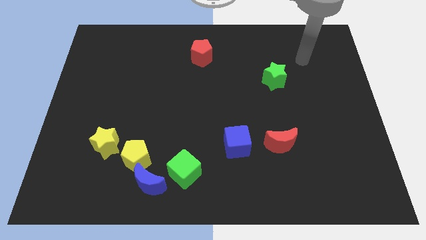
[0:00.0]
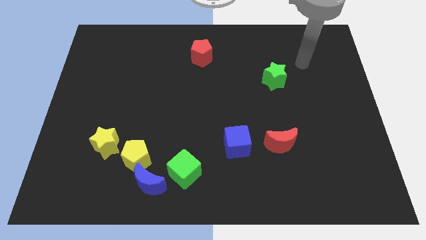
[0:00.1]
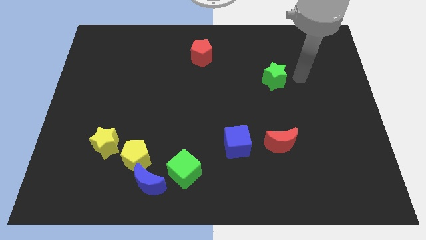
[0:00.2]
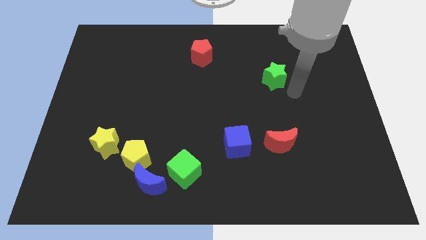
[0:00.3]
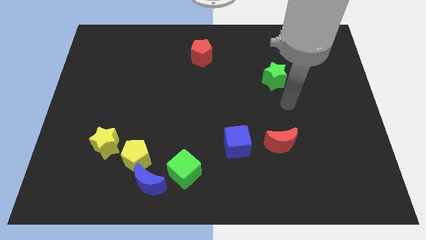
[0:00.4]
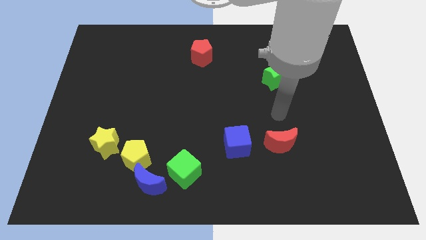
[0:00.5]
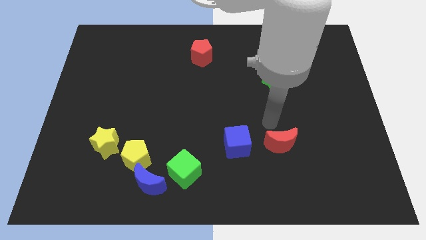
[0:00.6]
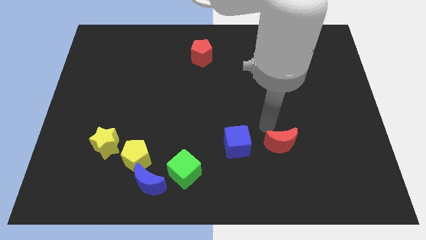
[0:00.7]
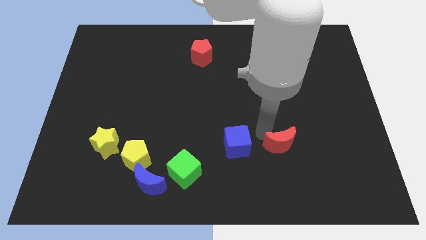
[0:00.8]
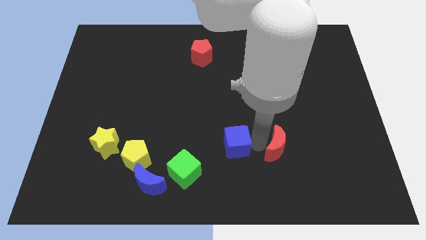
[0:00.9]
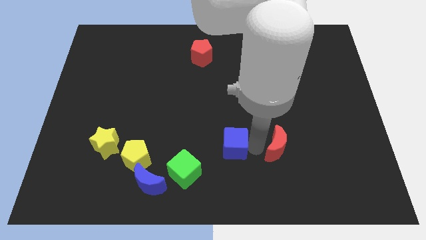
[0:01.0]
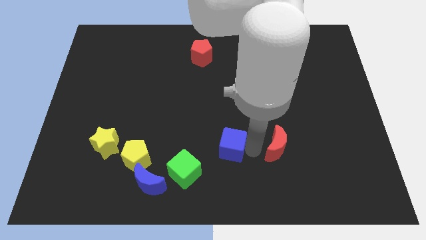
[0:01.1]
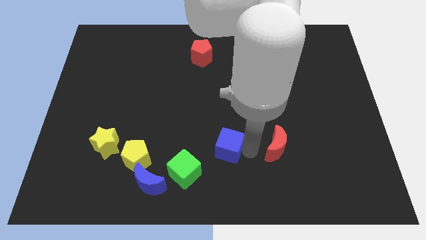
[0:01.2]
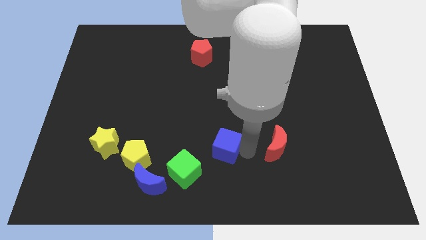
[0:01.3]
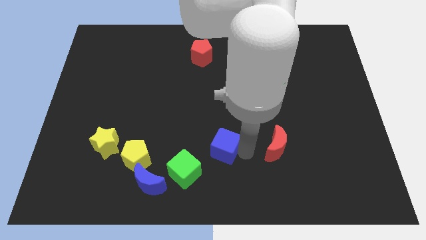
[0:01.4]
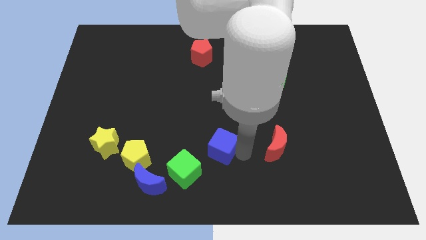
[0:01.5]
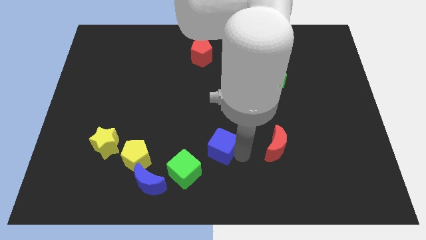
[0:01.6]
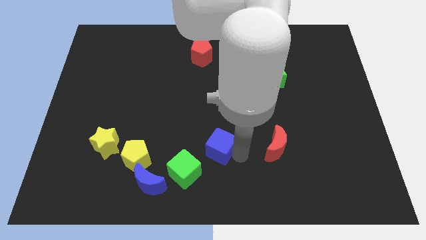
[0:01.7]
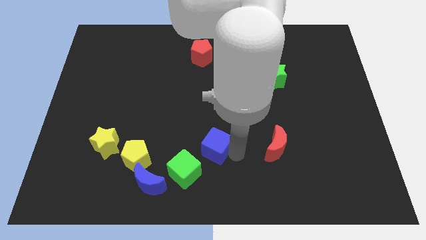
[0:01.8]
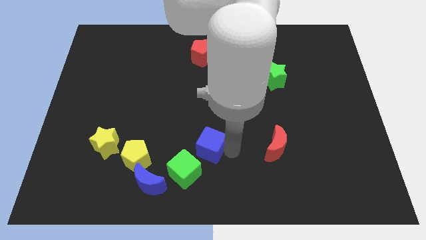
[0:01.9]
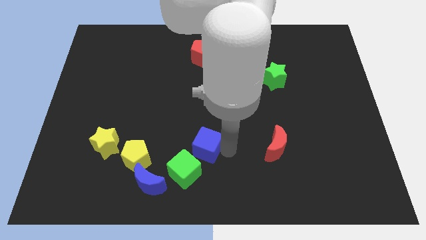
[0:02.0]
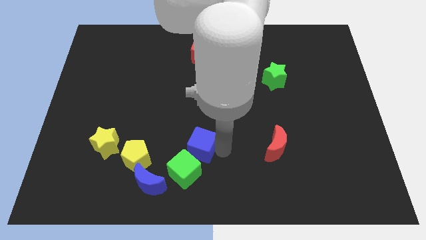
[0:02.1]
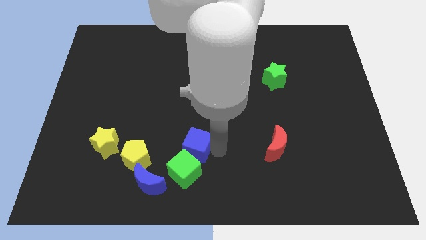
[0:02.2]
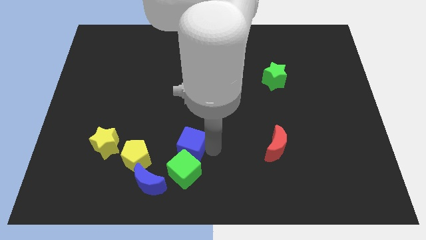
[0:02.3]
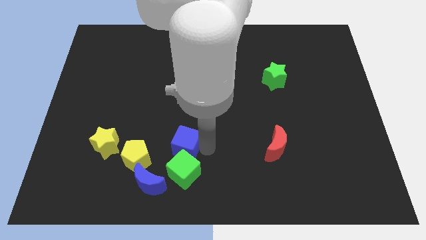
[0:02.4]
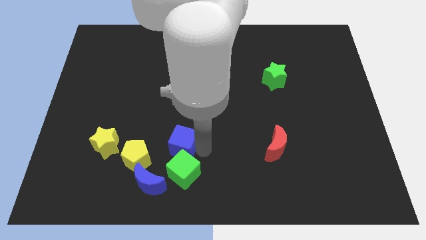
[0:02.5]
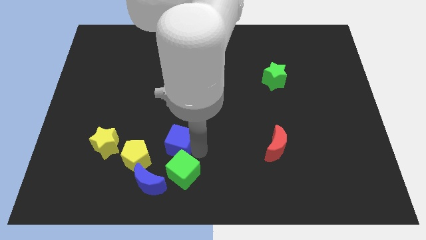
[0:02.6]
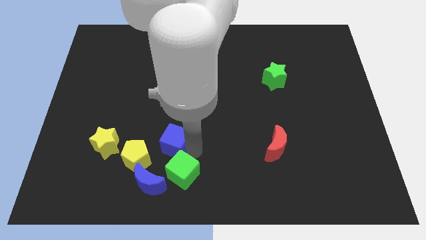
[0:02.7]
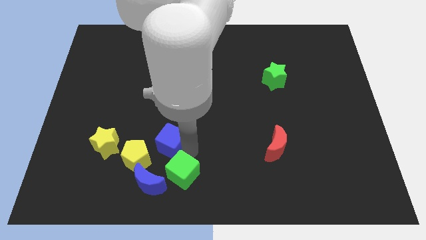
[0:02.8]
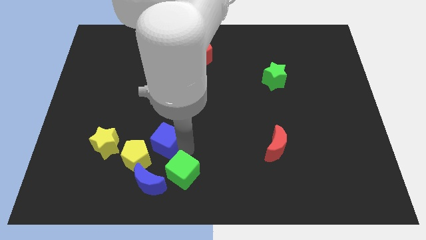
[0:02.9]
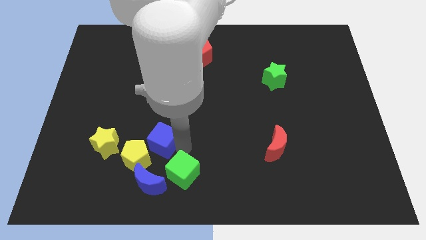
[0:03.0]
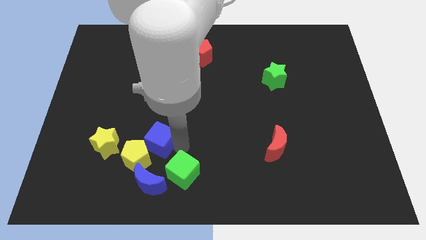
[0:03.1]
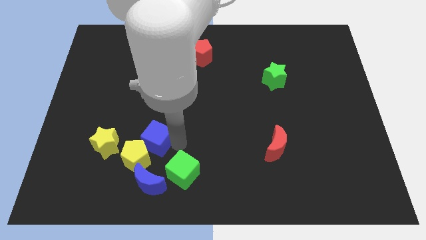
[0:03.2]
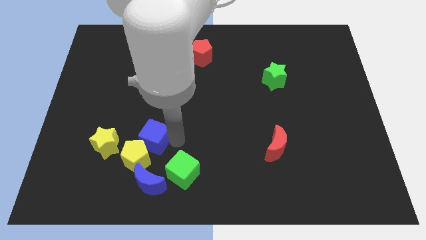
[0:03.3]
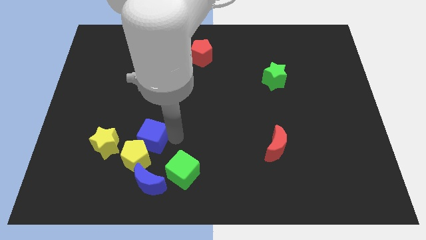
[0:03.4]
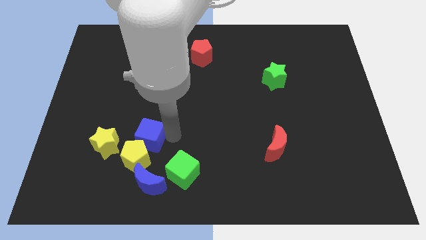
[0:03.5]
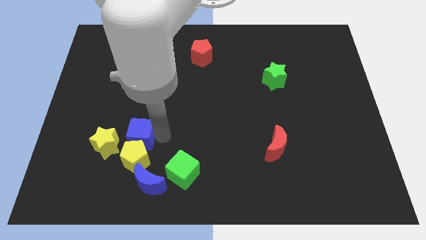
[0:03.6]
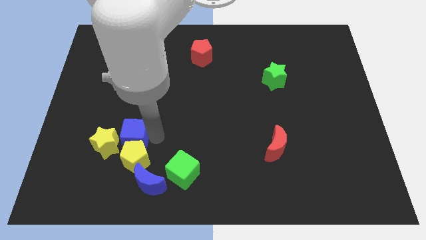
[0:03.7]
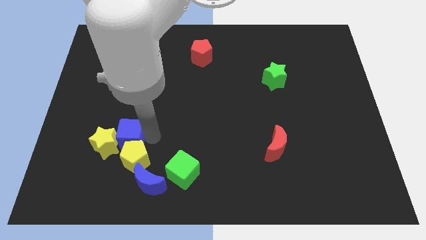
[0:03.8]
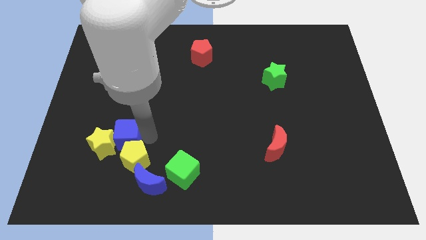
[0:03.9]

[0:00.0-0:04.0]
push the blue cube to the yellow star

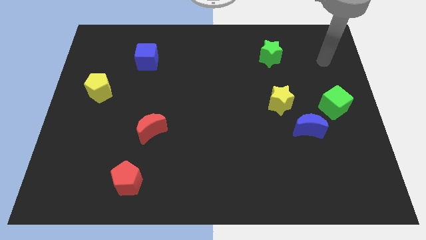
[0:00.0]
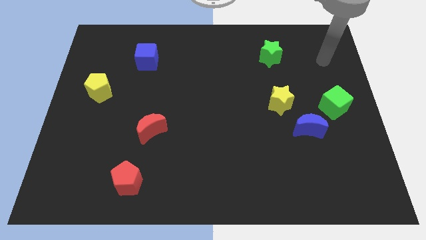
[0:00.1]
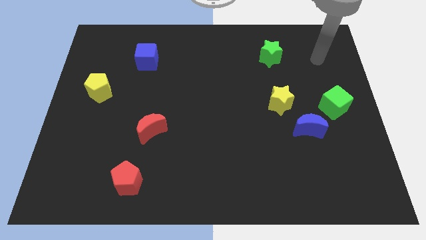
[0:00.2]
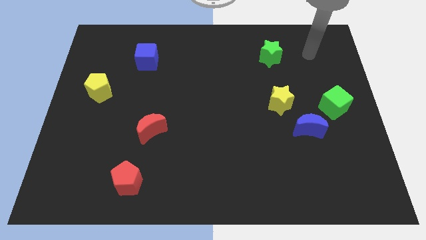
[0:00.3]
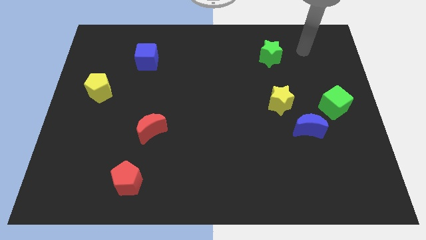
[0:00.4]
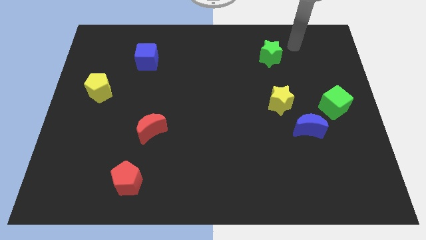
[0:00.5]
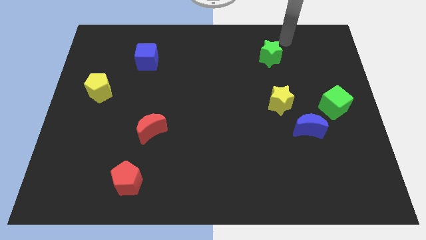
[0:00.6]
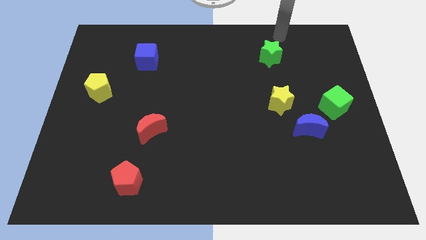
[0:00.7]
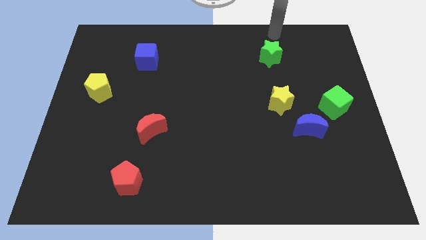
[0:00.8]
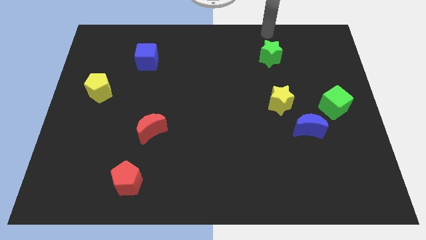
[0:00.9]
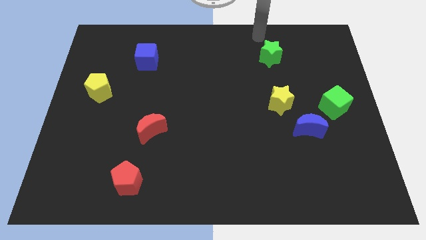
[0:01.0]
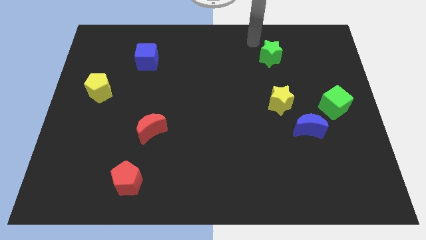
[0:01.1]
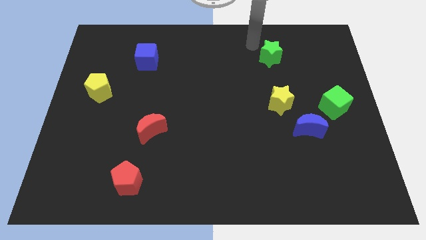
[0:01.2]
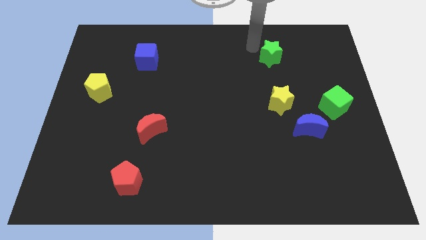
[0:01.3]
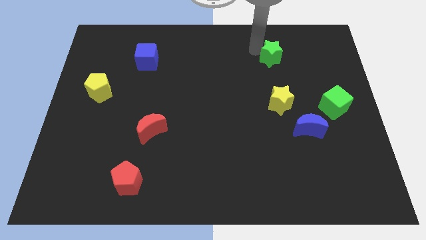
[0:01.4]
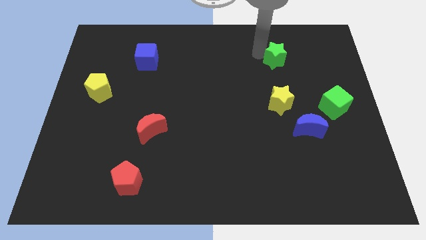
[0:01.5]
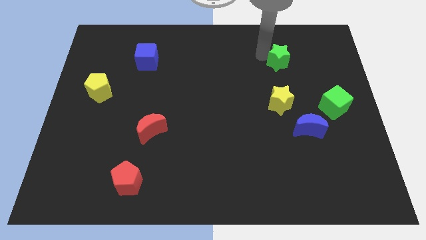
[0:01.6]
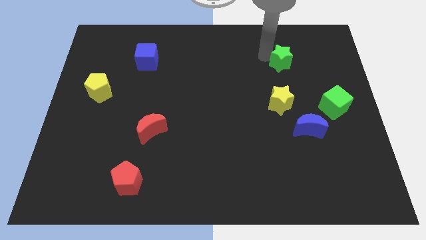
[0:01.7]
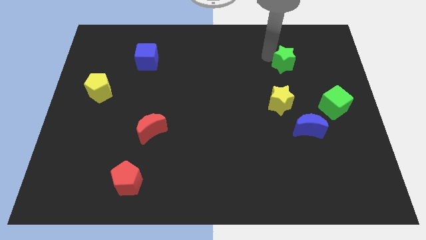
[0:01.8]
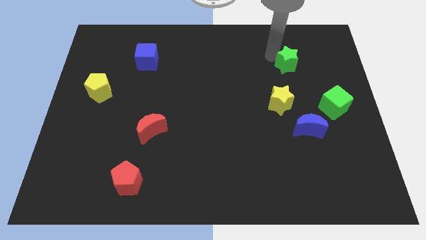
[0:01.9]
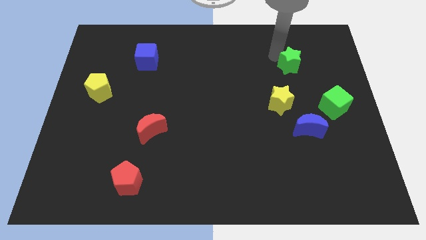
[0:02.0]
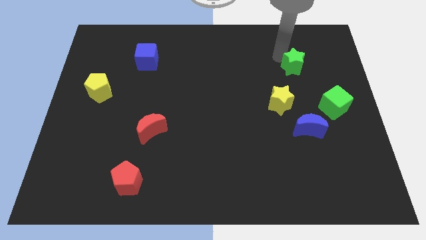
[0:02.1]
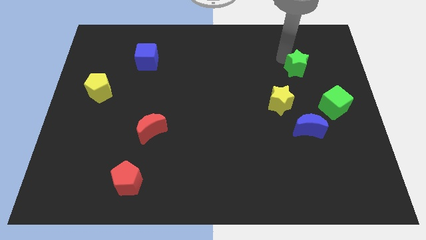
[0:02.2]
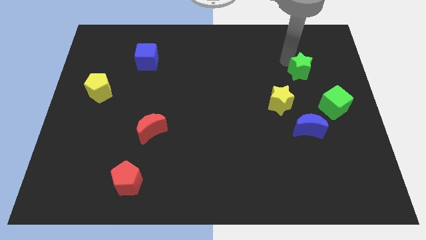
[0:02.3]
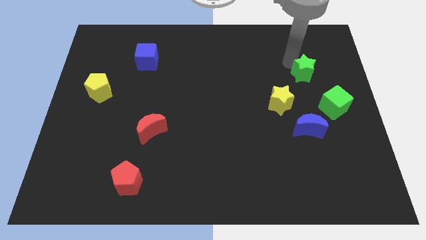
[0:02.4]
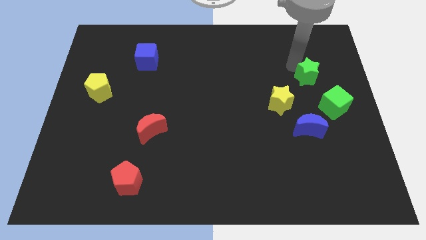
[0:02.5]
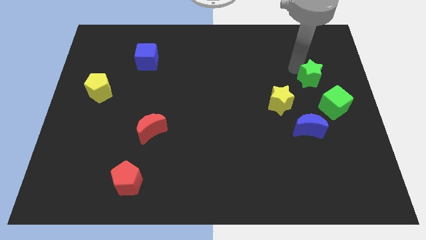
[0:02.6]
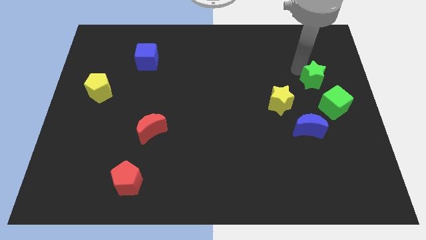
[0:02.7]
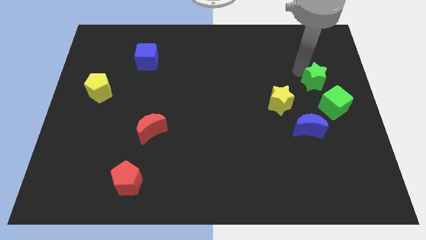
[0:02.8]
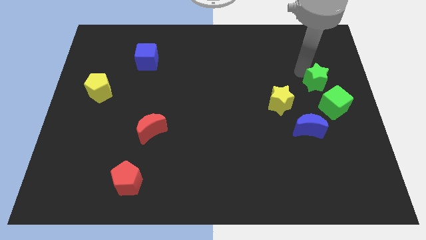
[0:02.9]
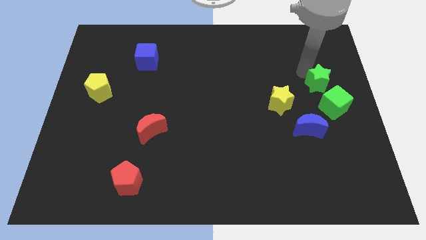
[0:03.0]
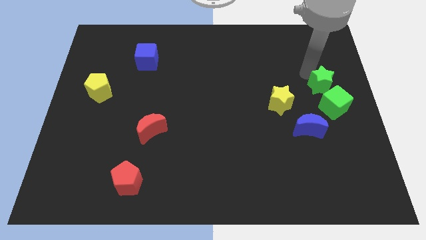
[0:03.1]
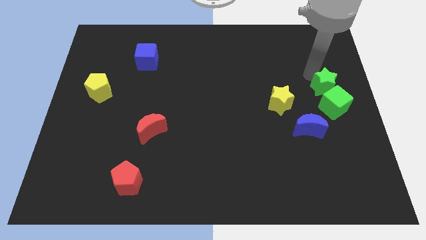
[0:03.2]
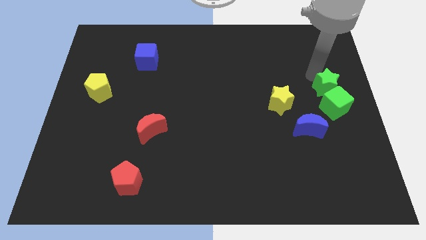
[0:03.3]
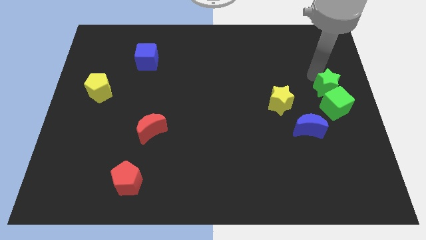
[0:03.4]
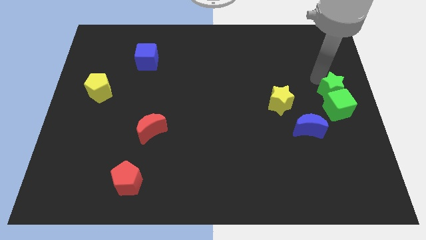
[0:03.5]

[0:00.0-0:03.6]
move the green star next to the green cube

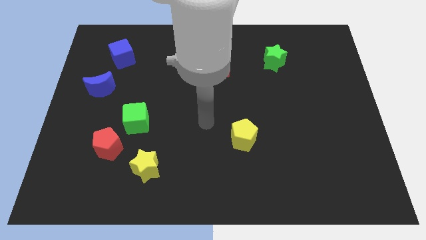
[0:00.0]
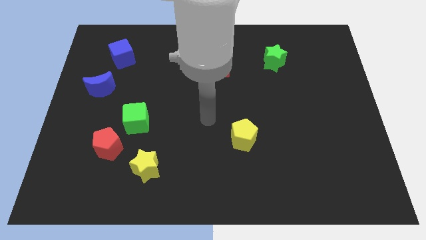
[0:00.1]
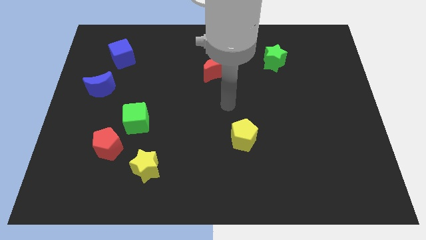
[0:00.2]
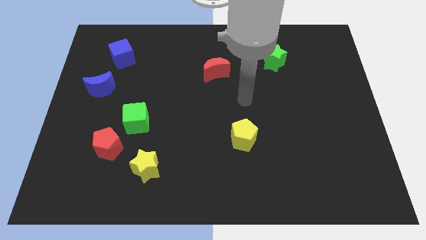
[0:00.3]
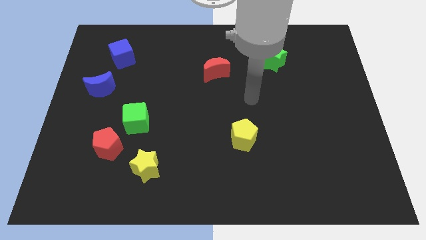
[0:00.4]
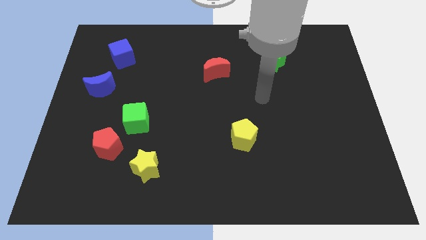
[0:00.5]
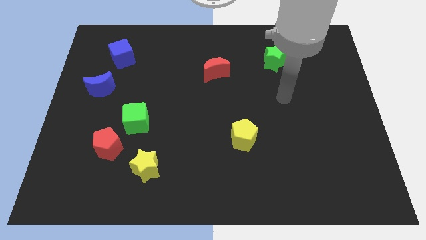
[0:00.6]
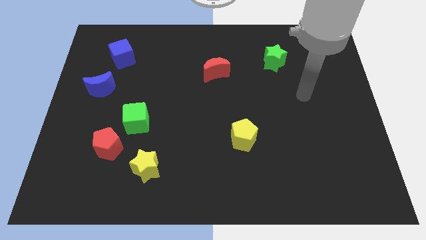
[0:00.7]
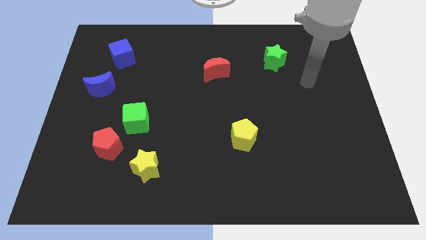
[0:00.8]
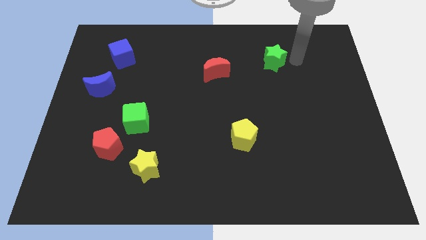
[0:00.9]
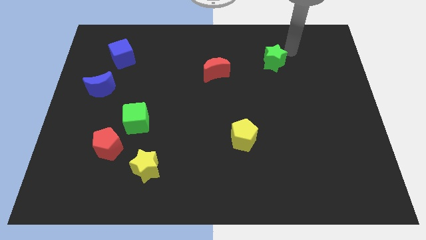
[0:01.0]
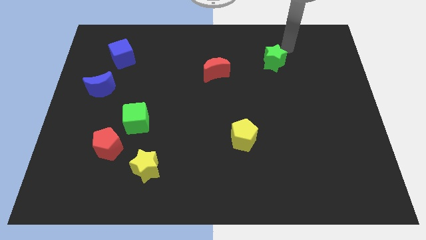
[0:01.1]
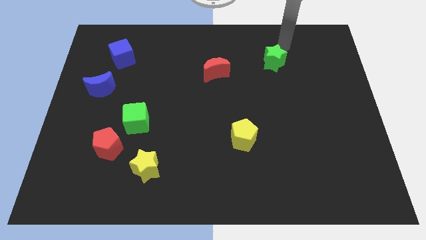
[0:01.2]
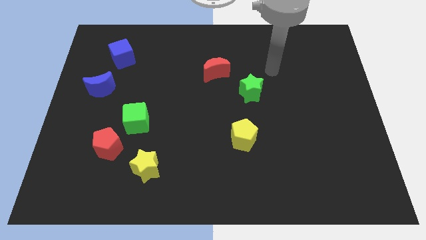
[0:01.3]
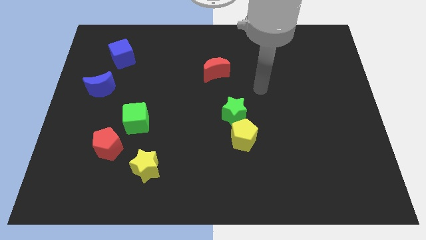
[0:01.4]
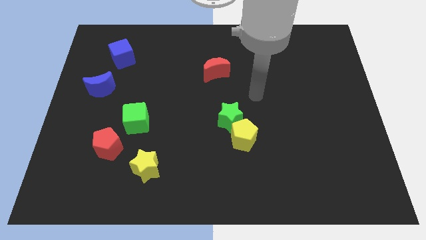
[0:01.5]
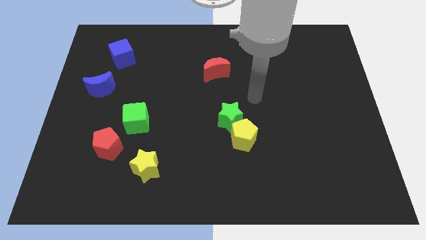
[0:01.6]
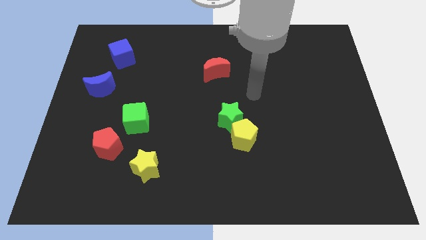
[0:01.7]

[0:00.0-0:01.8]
move the green star next to the yellow pentagon
